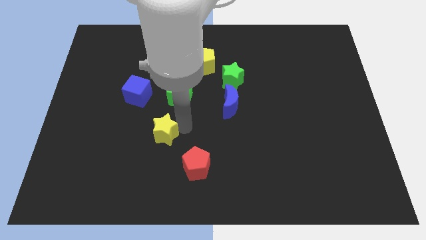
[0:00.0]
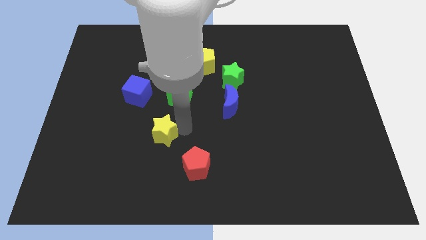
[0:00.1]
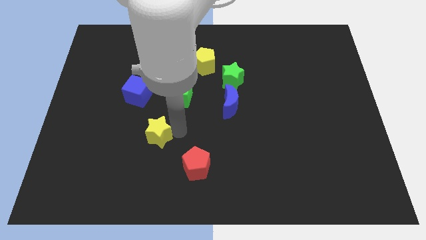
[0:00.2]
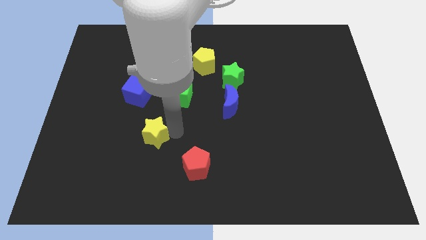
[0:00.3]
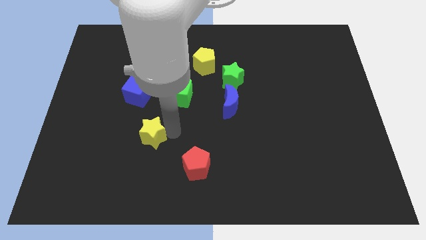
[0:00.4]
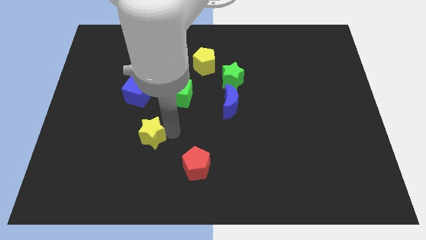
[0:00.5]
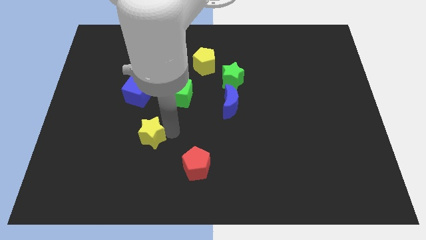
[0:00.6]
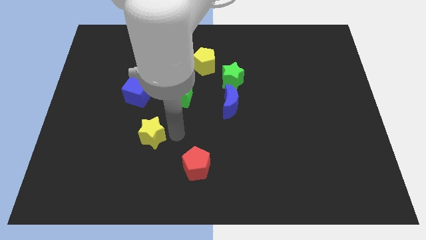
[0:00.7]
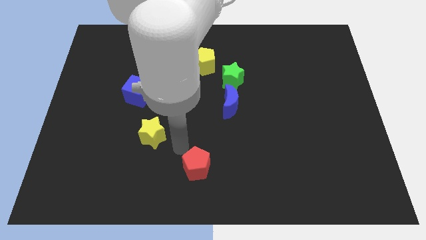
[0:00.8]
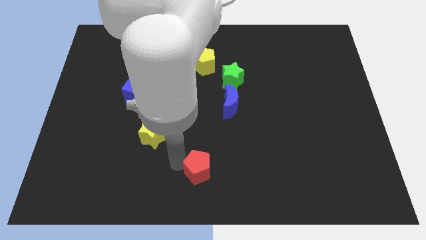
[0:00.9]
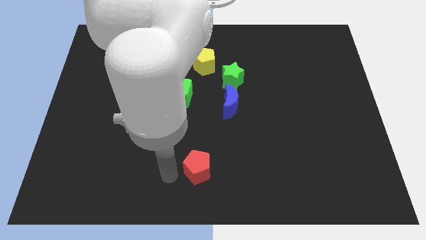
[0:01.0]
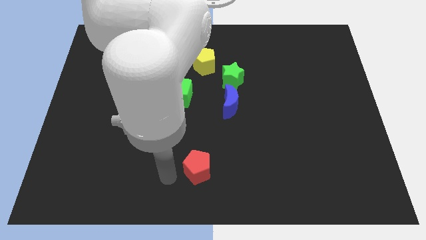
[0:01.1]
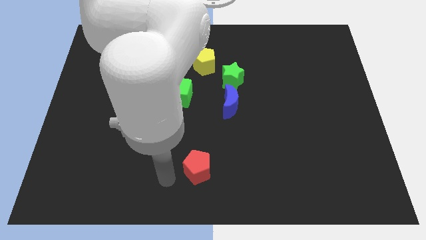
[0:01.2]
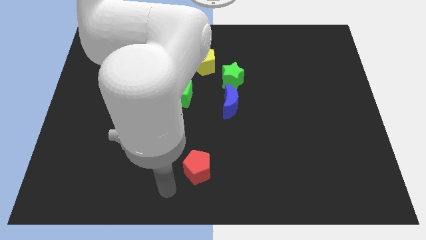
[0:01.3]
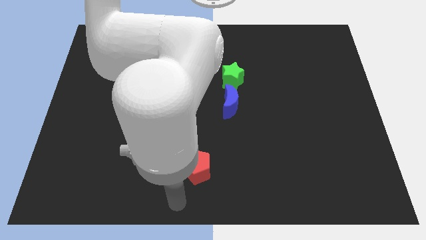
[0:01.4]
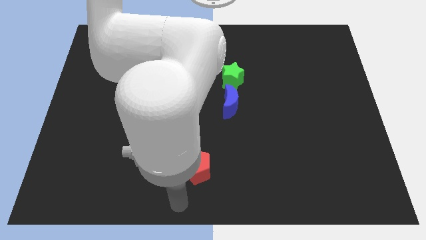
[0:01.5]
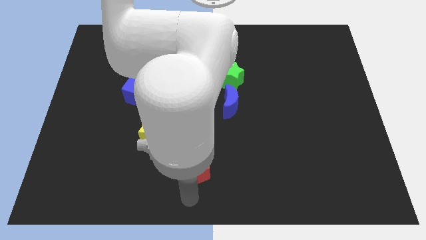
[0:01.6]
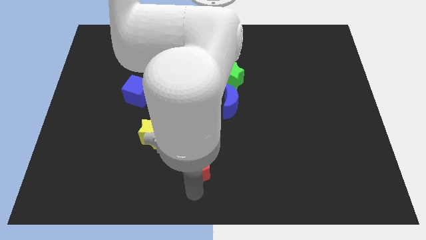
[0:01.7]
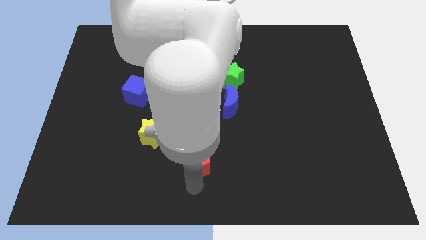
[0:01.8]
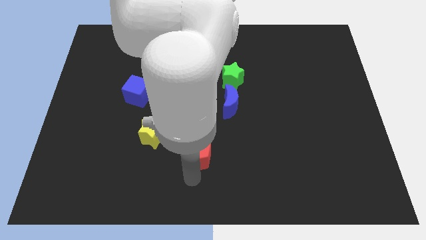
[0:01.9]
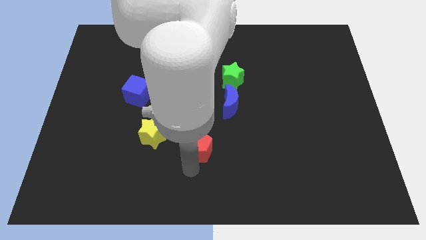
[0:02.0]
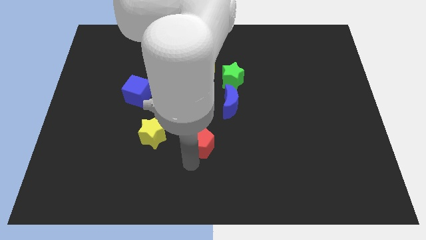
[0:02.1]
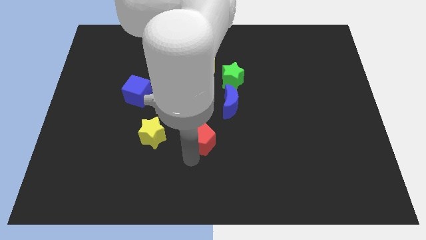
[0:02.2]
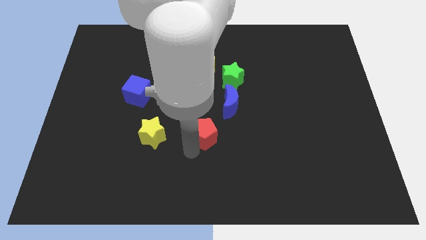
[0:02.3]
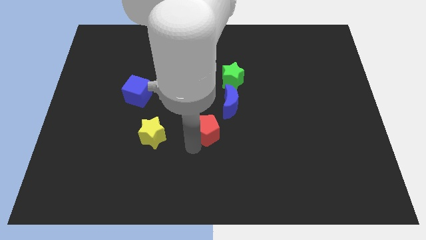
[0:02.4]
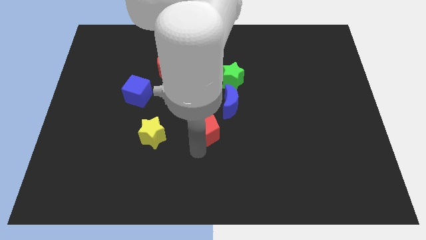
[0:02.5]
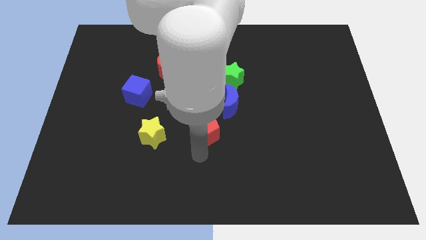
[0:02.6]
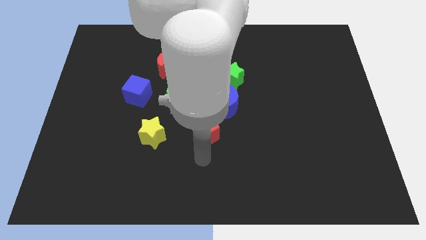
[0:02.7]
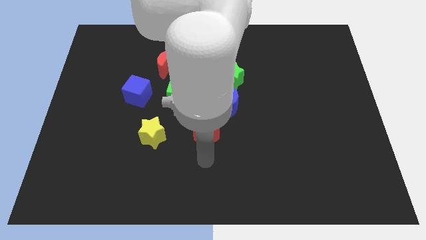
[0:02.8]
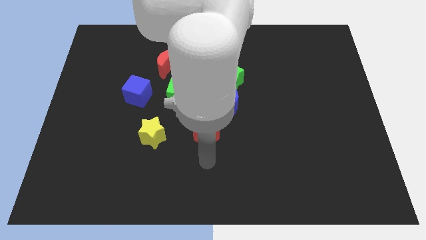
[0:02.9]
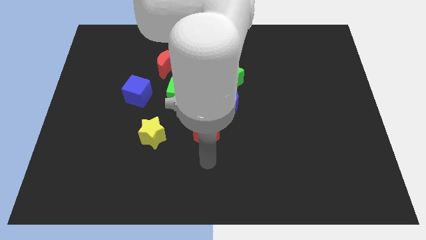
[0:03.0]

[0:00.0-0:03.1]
move red pentagon up towards the center of board

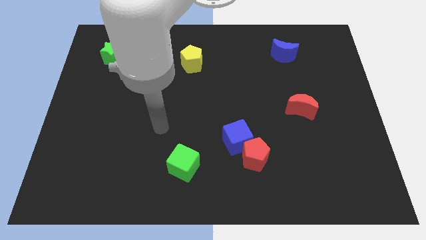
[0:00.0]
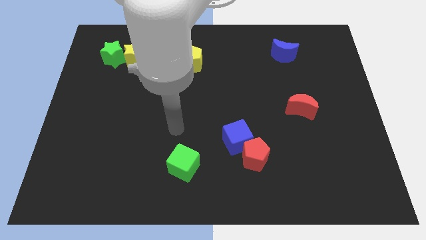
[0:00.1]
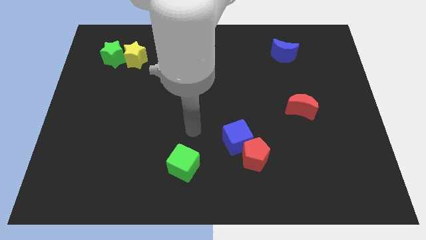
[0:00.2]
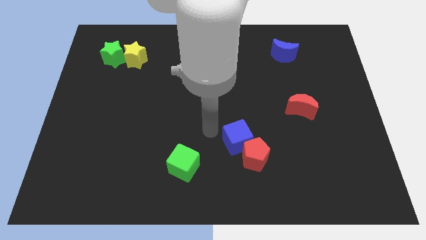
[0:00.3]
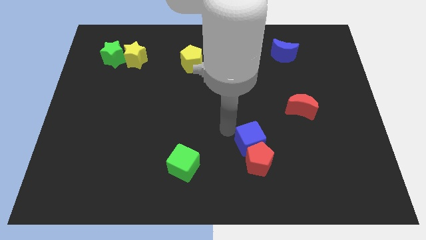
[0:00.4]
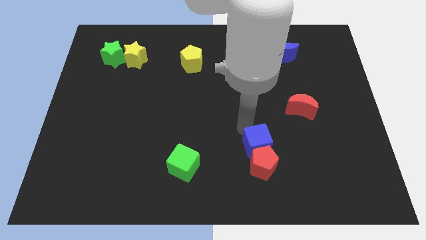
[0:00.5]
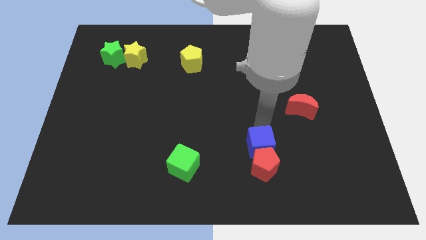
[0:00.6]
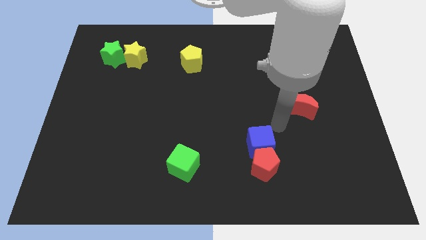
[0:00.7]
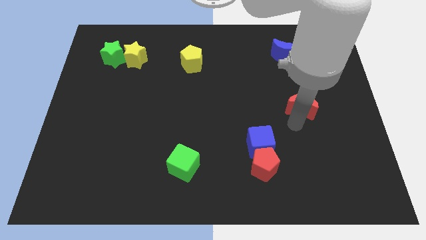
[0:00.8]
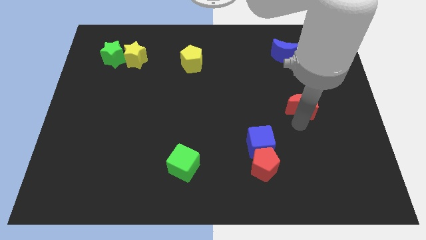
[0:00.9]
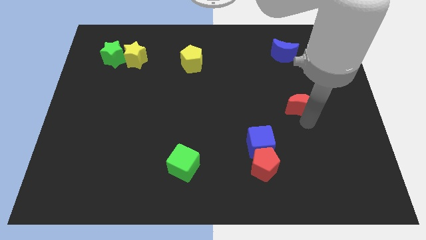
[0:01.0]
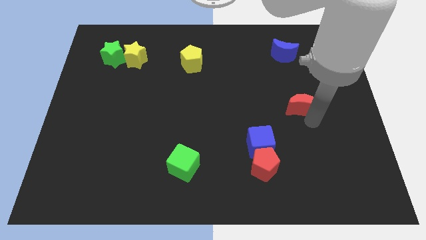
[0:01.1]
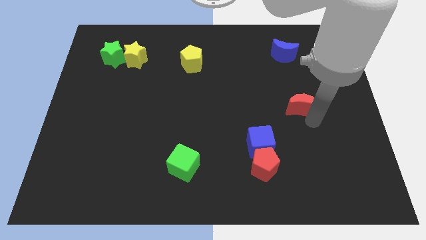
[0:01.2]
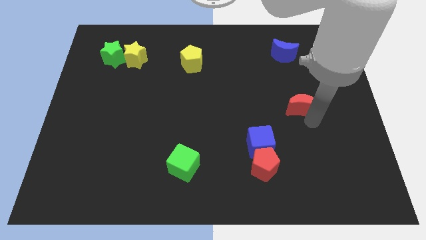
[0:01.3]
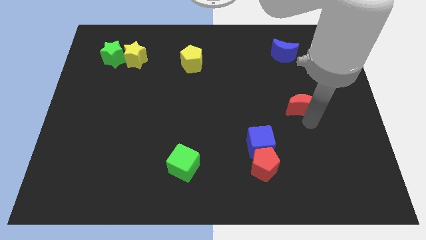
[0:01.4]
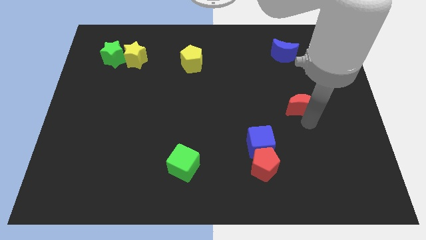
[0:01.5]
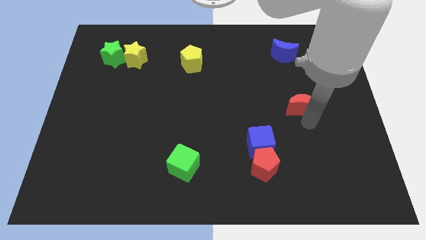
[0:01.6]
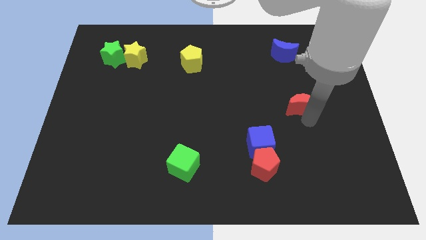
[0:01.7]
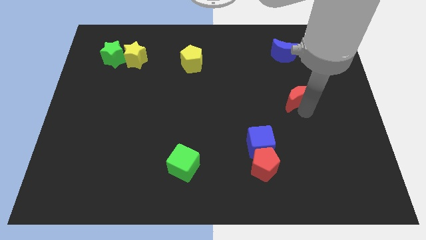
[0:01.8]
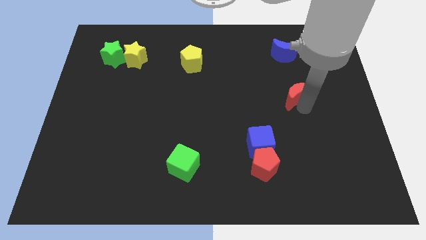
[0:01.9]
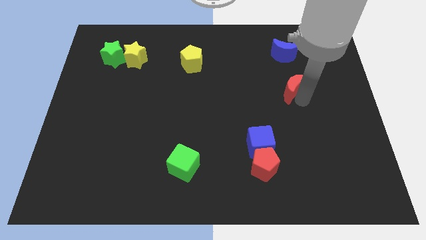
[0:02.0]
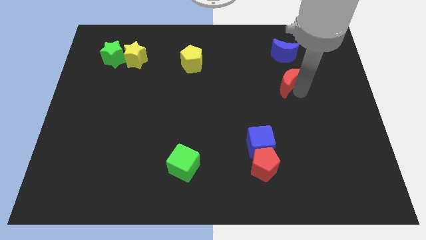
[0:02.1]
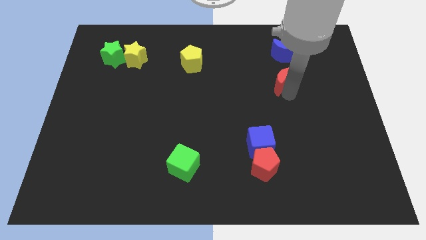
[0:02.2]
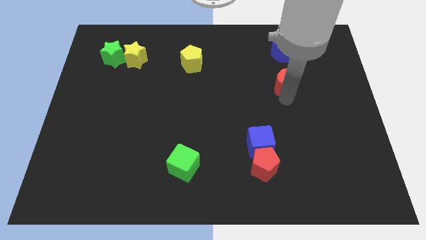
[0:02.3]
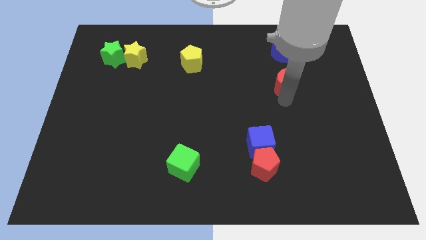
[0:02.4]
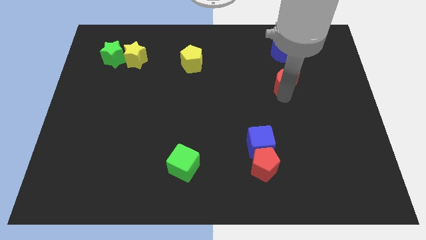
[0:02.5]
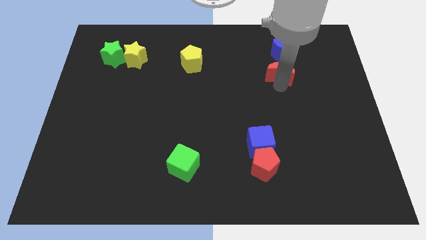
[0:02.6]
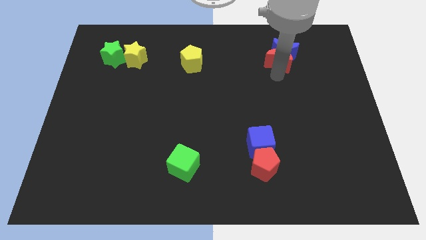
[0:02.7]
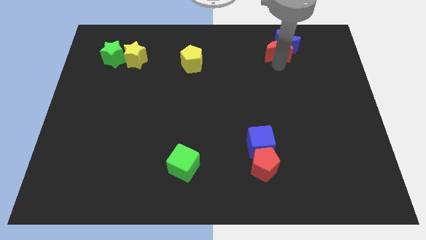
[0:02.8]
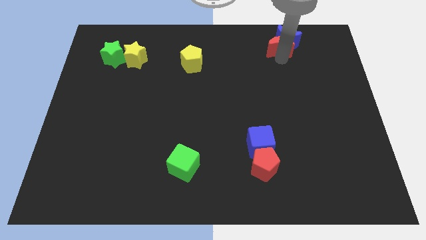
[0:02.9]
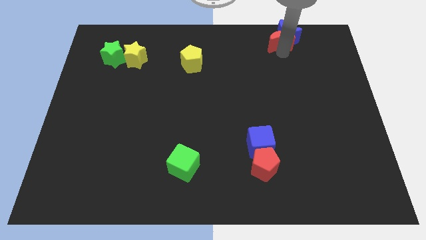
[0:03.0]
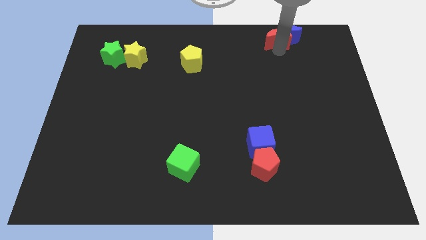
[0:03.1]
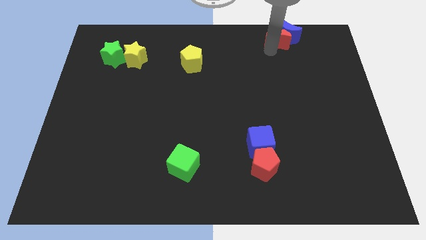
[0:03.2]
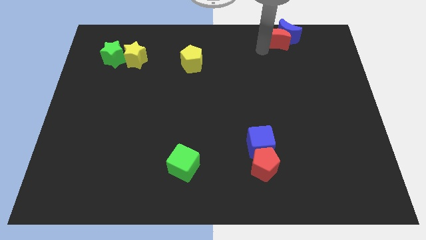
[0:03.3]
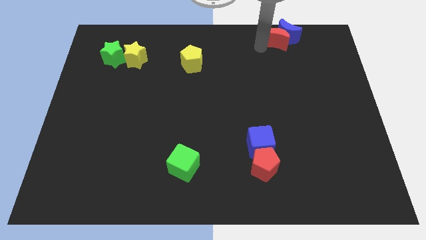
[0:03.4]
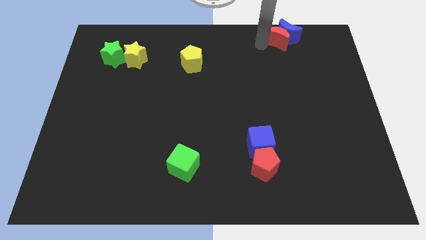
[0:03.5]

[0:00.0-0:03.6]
make the red crescent to touch the bottom side of the blue crescent

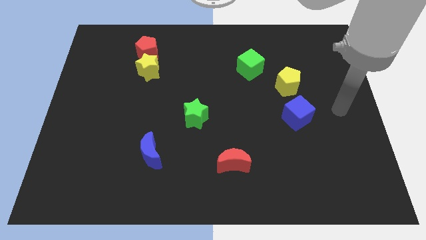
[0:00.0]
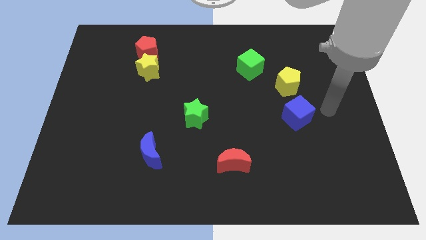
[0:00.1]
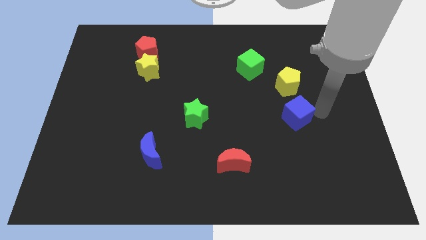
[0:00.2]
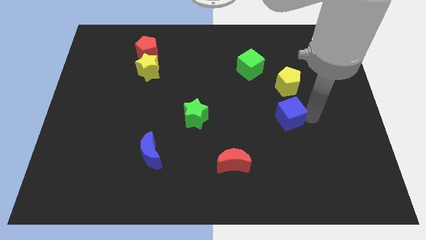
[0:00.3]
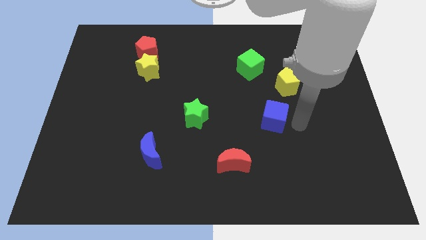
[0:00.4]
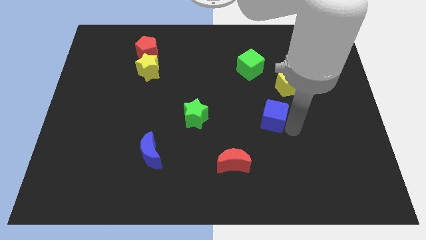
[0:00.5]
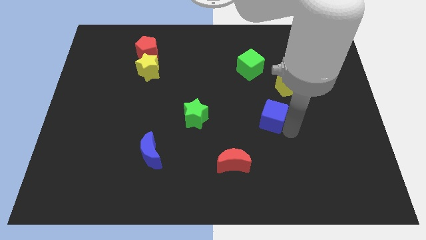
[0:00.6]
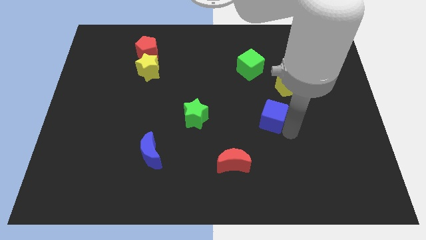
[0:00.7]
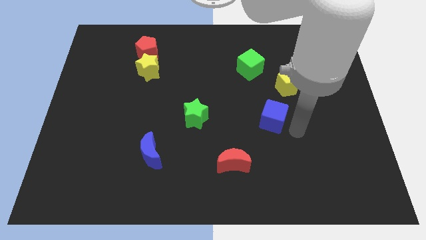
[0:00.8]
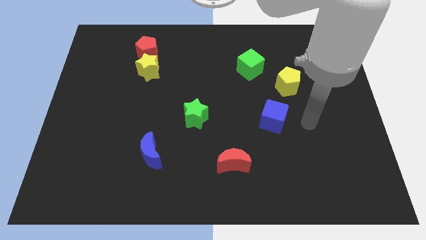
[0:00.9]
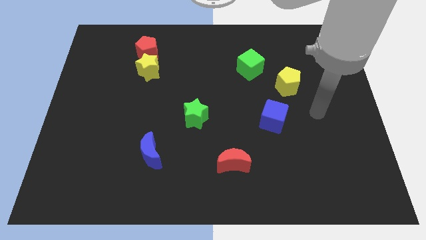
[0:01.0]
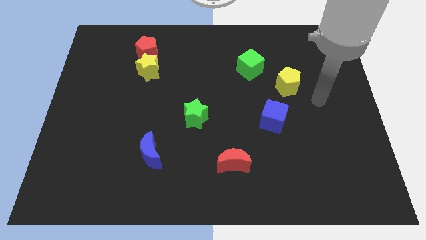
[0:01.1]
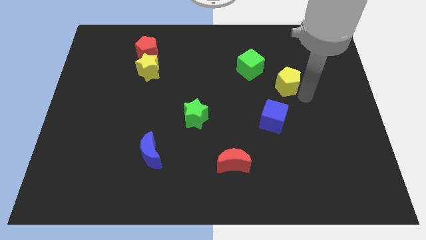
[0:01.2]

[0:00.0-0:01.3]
move the blue cube to the left of the board

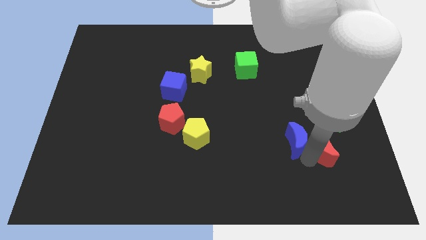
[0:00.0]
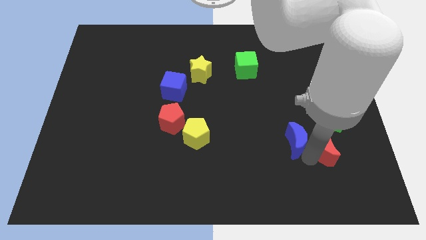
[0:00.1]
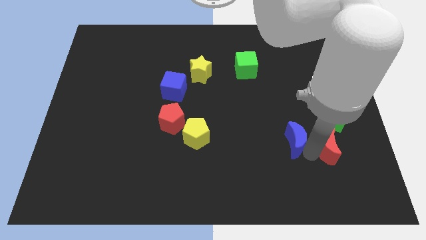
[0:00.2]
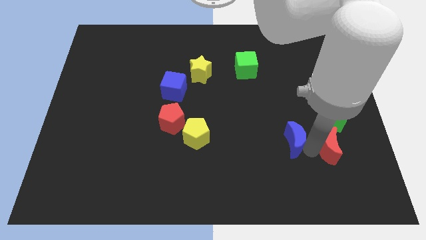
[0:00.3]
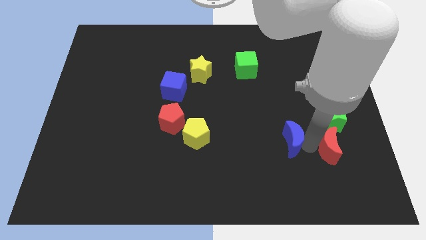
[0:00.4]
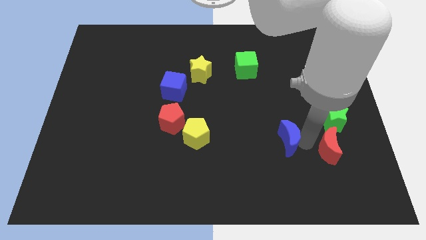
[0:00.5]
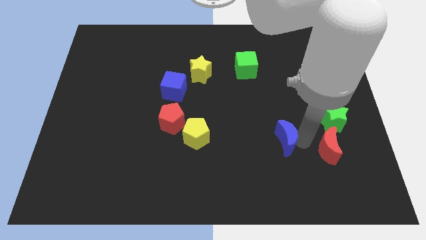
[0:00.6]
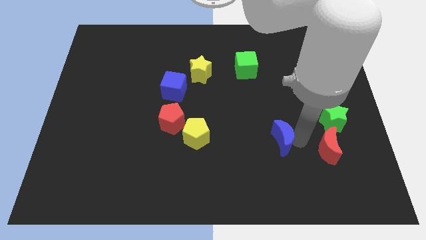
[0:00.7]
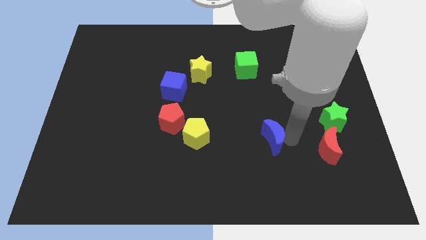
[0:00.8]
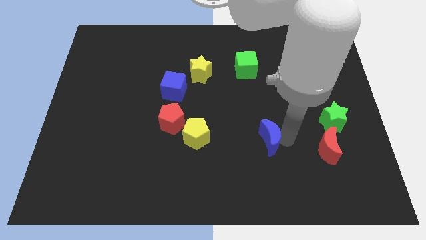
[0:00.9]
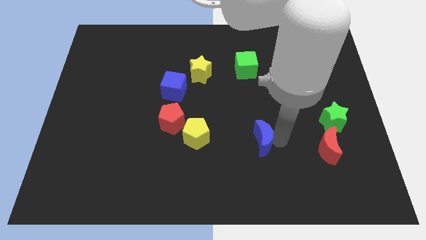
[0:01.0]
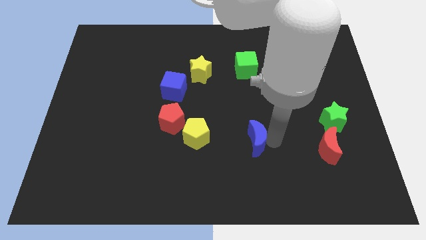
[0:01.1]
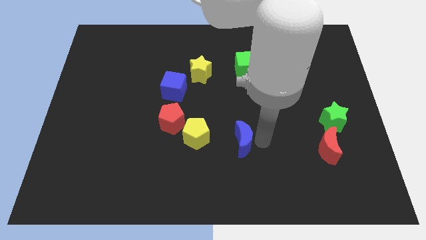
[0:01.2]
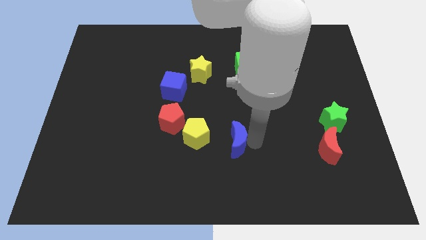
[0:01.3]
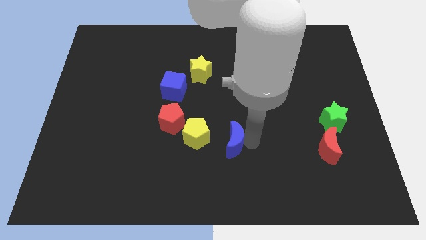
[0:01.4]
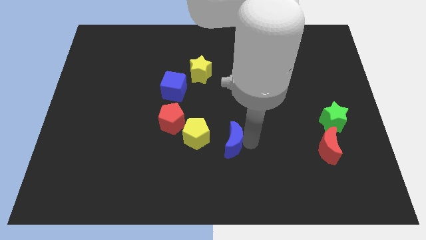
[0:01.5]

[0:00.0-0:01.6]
separate the blue crescent from red crescent
